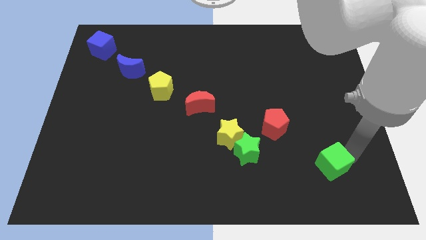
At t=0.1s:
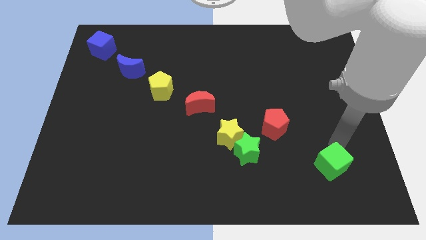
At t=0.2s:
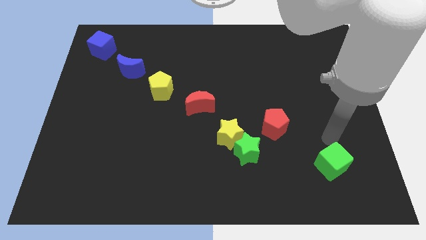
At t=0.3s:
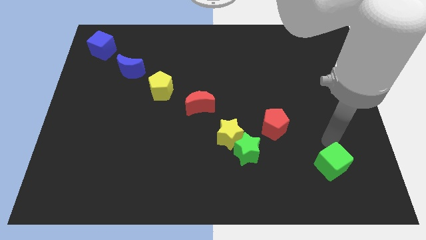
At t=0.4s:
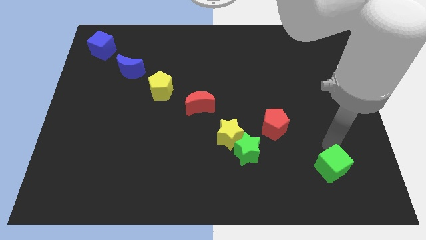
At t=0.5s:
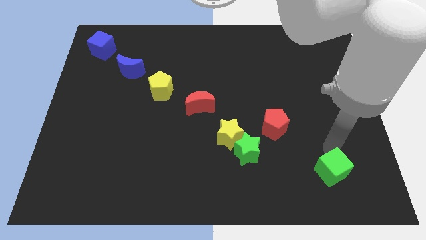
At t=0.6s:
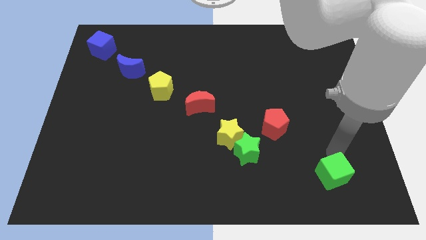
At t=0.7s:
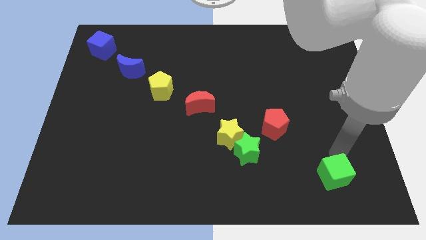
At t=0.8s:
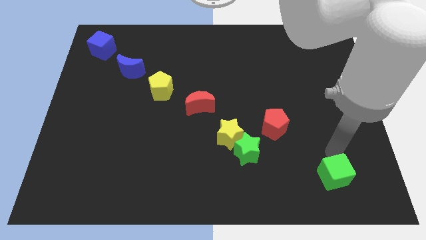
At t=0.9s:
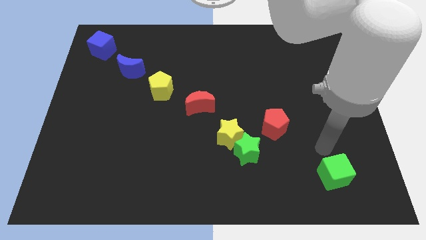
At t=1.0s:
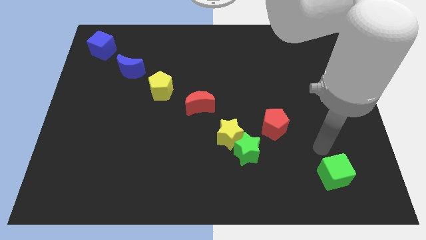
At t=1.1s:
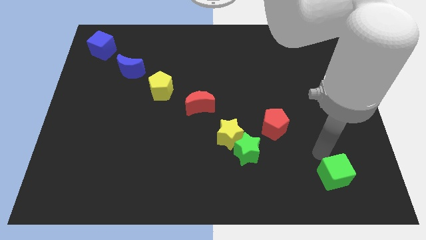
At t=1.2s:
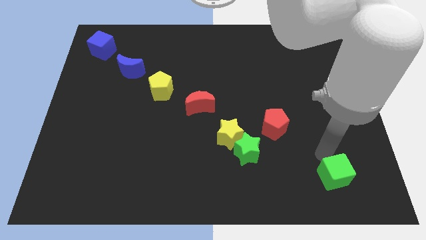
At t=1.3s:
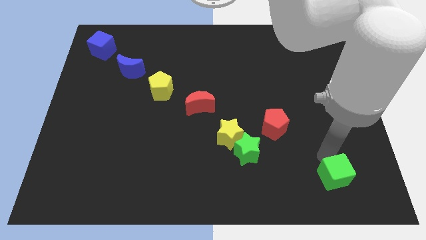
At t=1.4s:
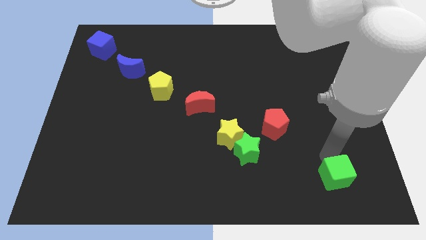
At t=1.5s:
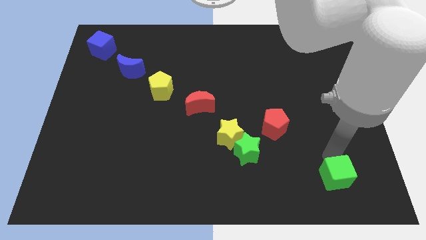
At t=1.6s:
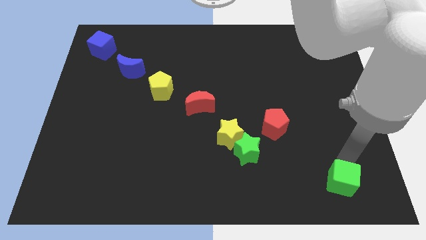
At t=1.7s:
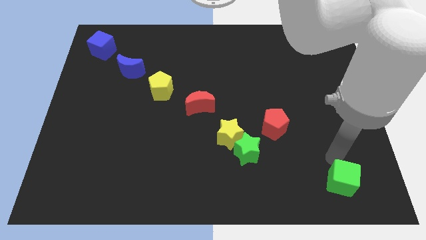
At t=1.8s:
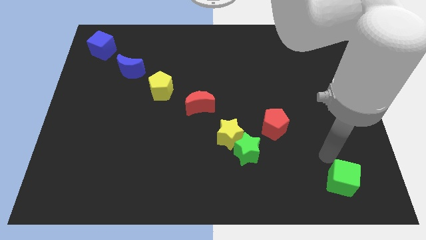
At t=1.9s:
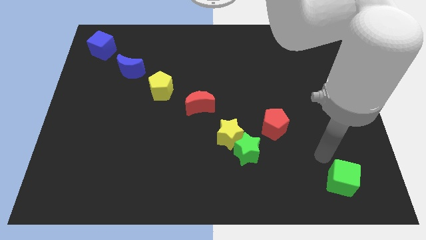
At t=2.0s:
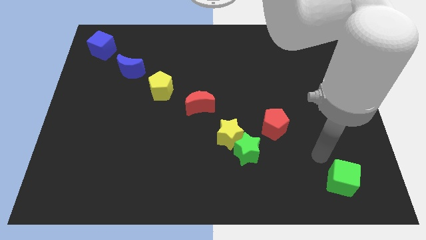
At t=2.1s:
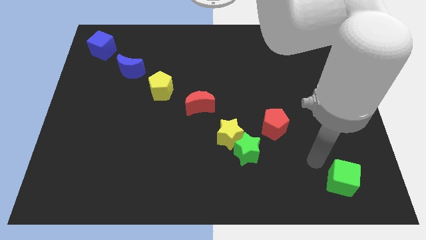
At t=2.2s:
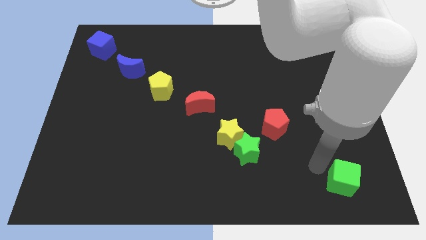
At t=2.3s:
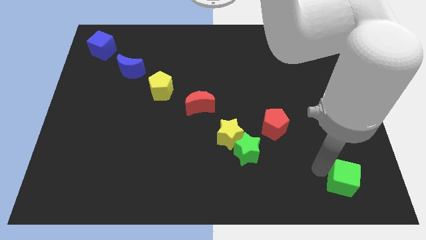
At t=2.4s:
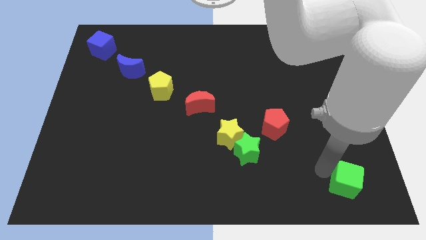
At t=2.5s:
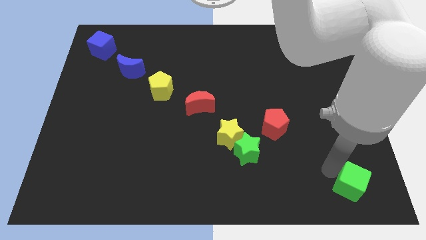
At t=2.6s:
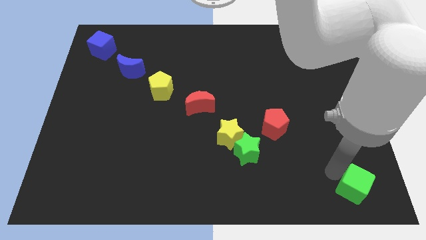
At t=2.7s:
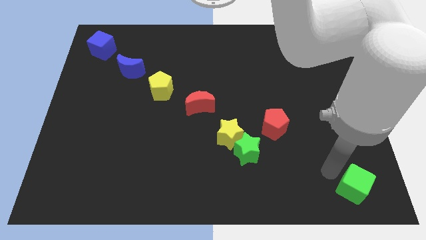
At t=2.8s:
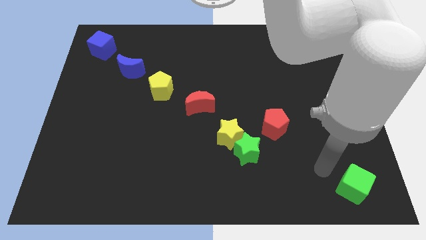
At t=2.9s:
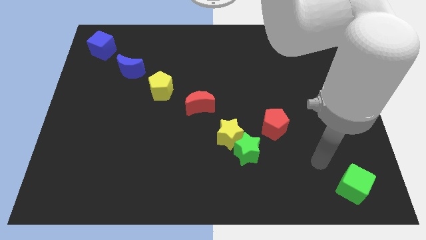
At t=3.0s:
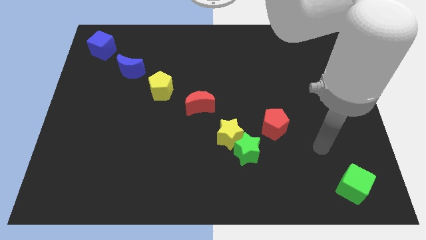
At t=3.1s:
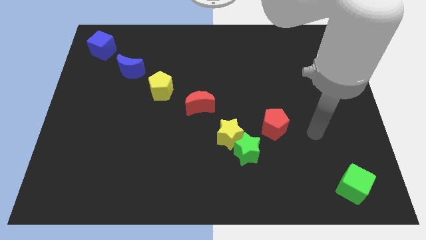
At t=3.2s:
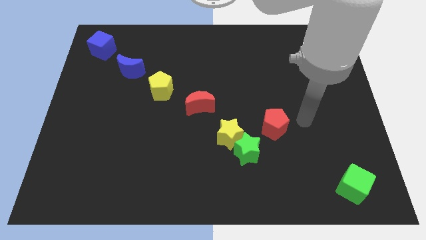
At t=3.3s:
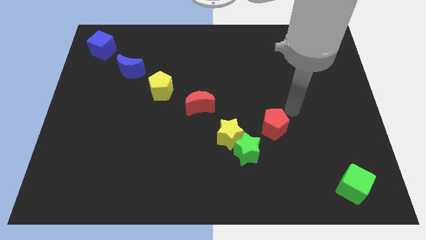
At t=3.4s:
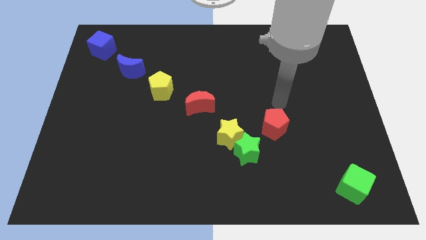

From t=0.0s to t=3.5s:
push the green cube towards the bottom right corner of the board

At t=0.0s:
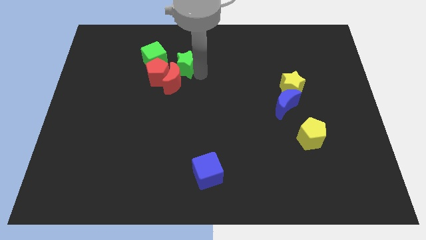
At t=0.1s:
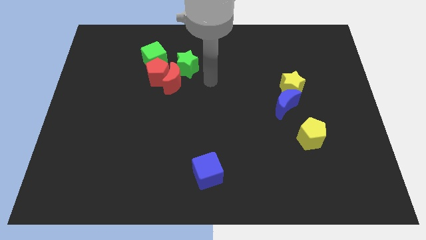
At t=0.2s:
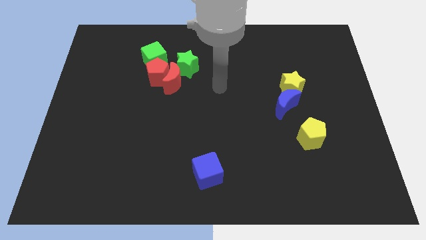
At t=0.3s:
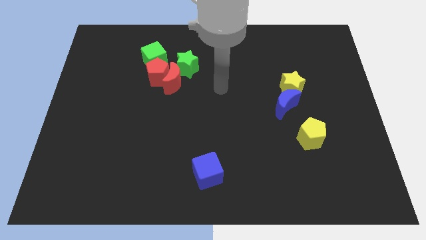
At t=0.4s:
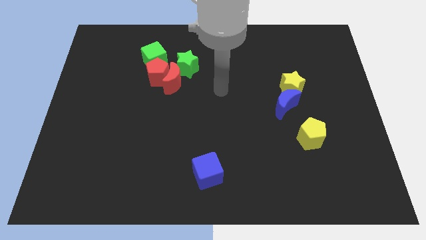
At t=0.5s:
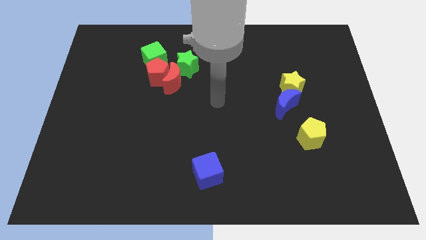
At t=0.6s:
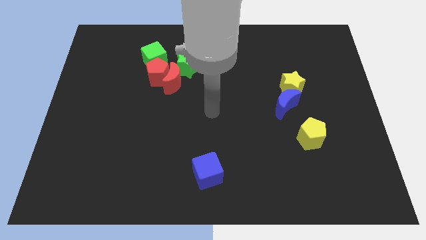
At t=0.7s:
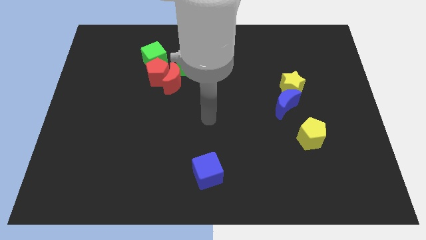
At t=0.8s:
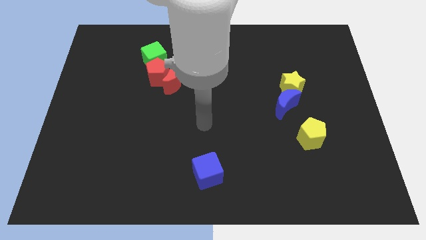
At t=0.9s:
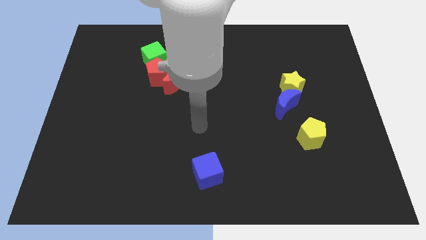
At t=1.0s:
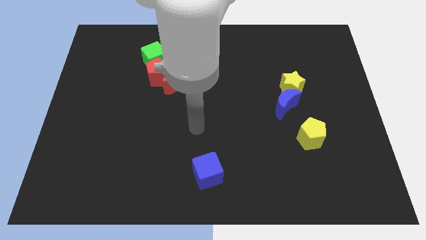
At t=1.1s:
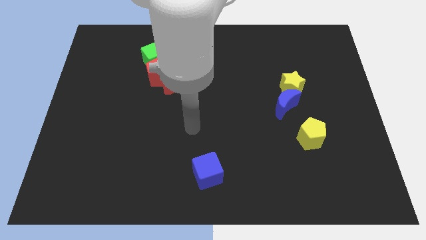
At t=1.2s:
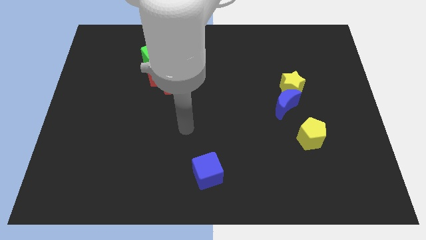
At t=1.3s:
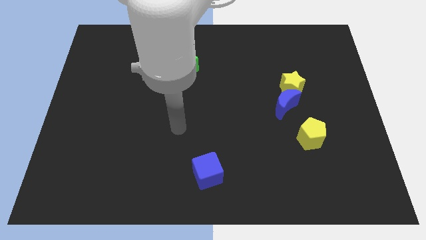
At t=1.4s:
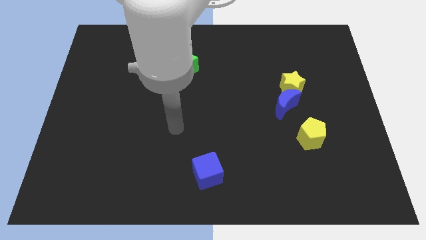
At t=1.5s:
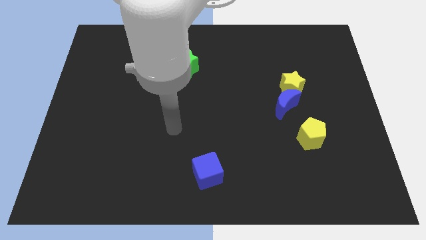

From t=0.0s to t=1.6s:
move the arm away from the green star

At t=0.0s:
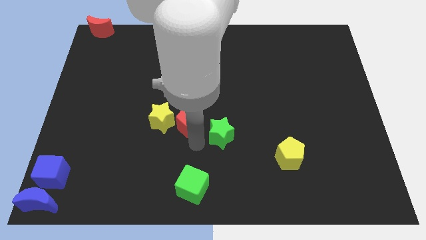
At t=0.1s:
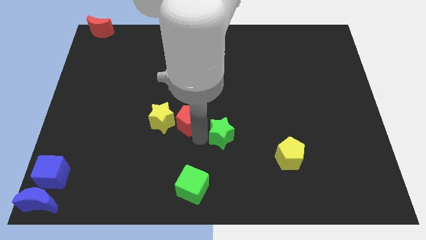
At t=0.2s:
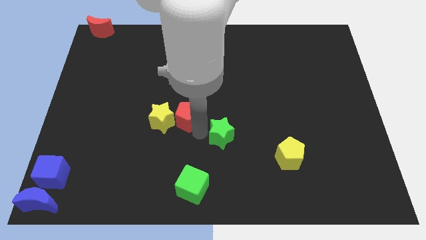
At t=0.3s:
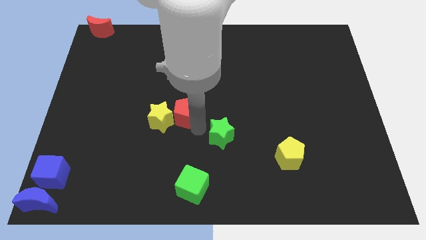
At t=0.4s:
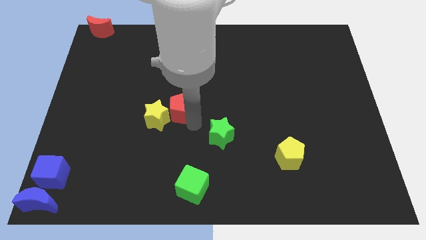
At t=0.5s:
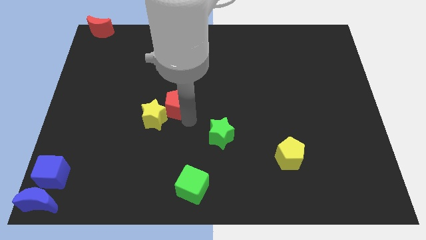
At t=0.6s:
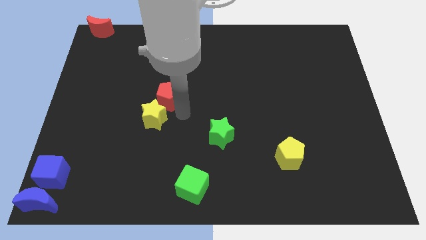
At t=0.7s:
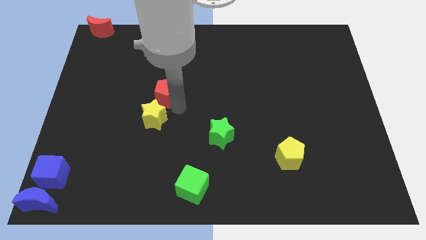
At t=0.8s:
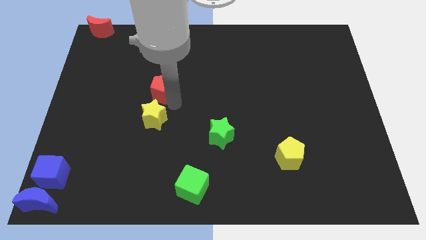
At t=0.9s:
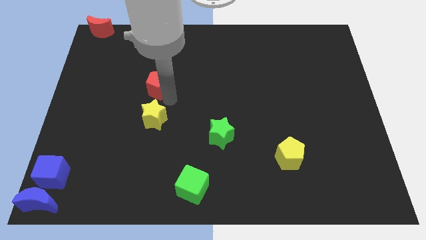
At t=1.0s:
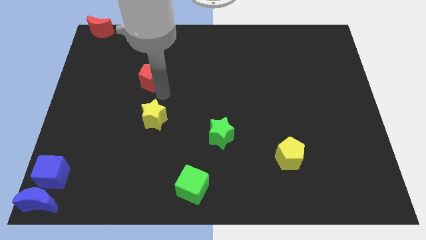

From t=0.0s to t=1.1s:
place the red pentagon vertically above the yellow star

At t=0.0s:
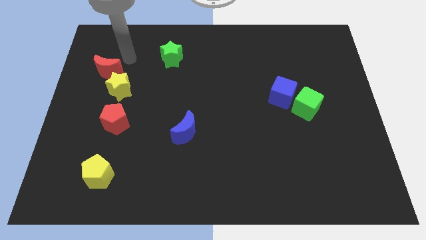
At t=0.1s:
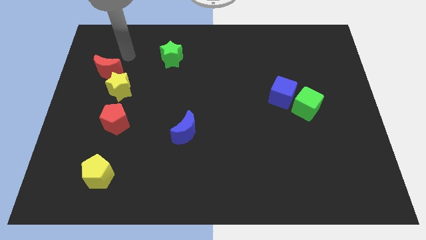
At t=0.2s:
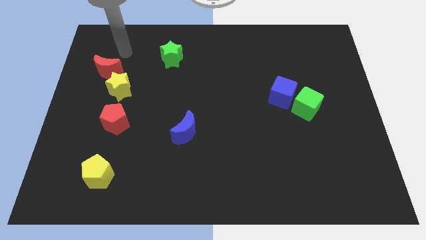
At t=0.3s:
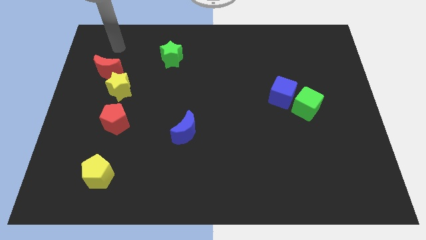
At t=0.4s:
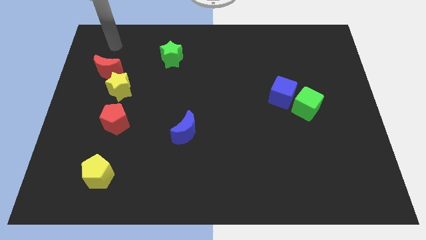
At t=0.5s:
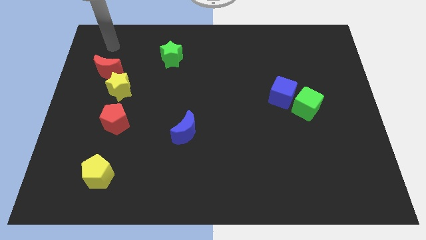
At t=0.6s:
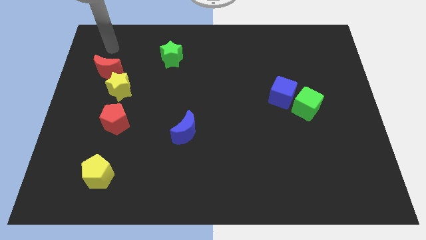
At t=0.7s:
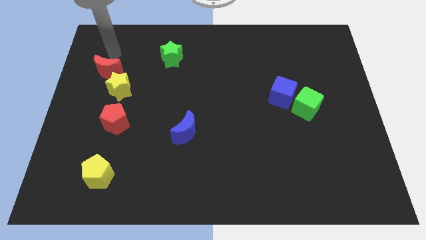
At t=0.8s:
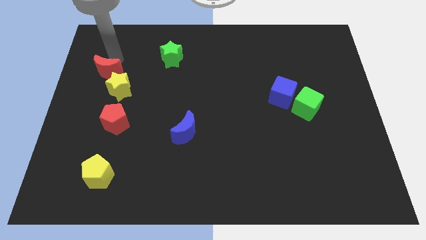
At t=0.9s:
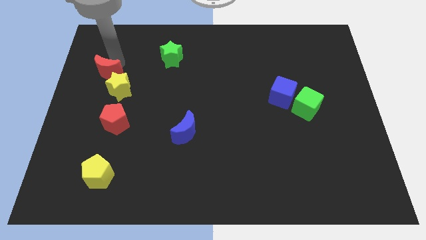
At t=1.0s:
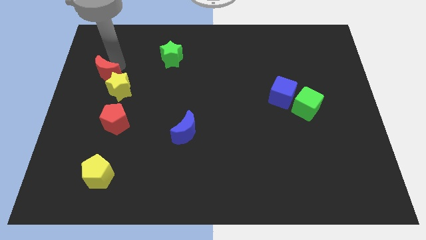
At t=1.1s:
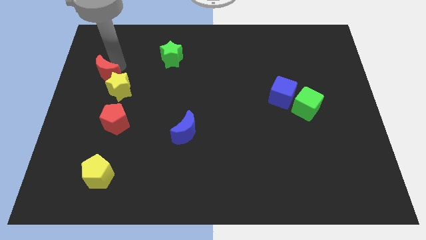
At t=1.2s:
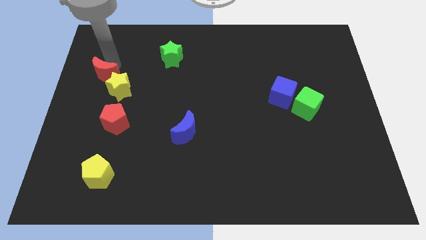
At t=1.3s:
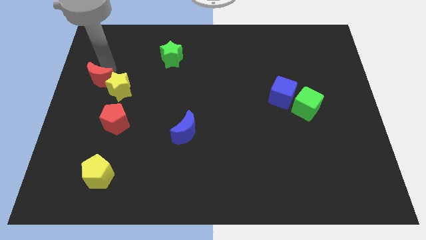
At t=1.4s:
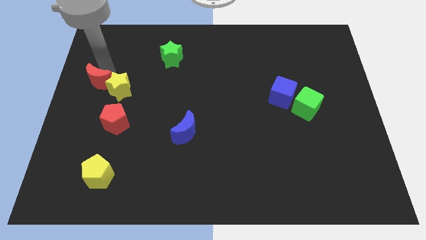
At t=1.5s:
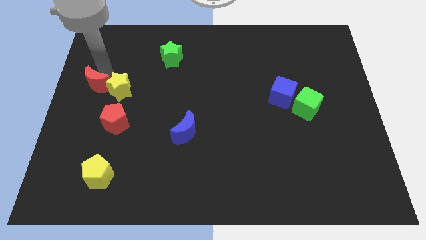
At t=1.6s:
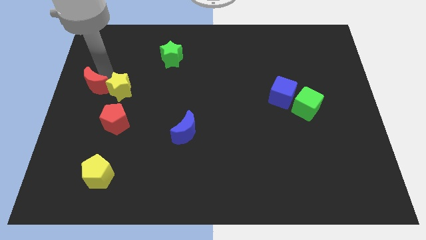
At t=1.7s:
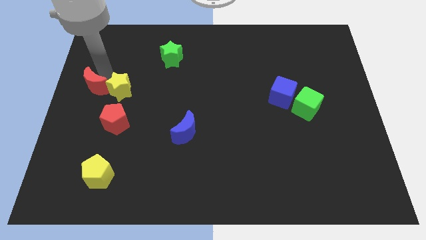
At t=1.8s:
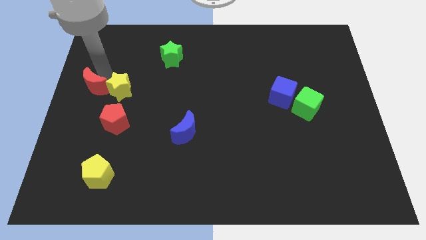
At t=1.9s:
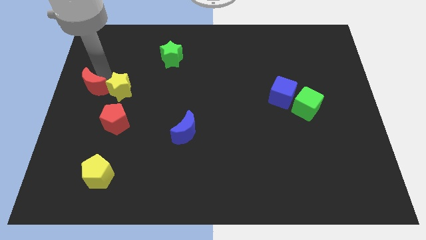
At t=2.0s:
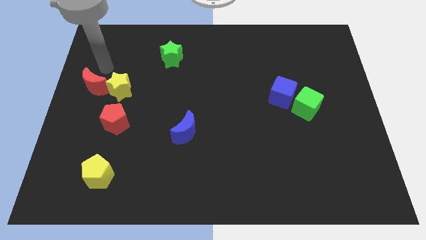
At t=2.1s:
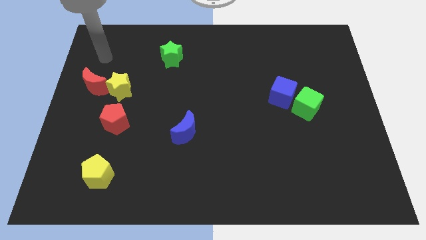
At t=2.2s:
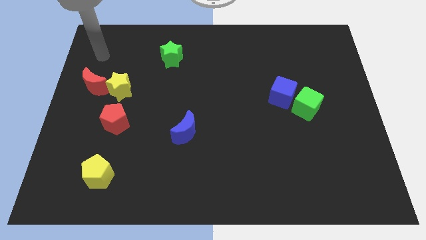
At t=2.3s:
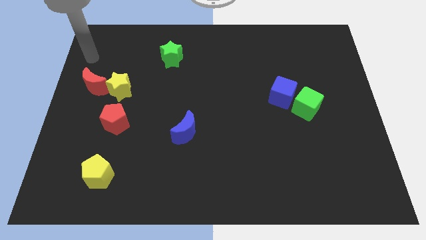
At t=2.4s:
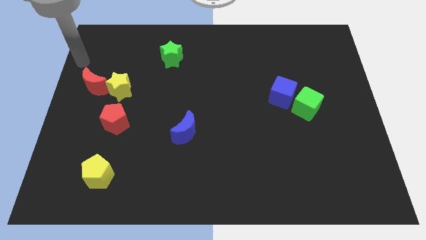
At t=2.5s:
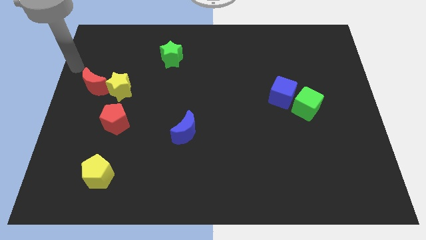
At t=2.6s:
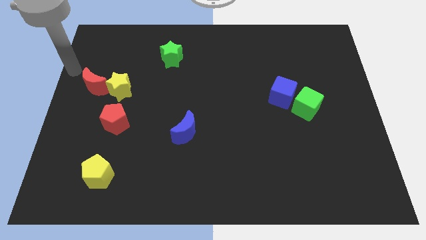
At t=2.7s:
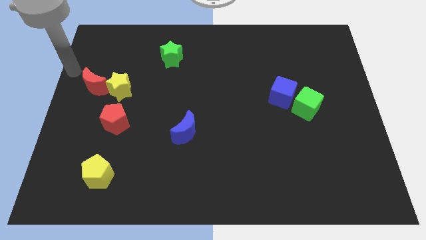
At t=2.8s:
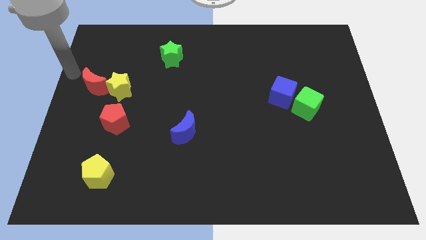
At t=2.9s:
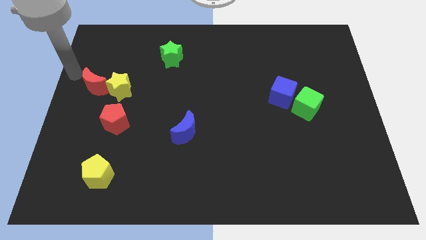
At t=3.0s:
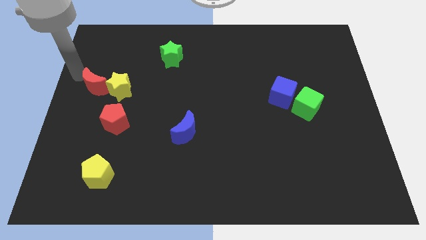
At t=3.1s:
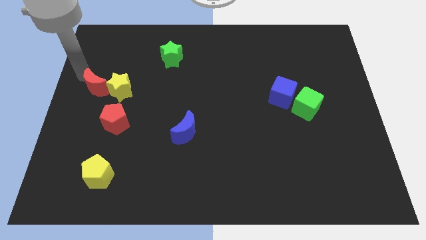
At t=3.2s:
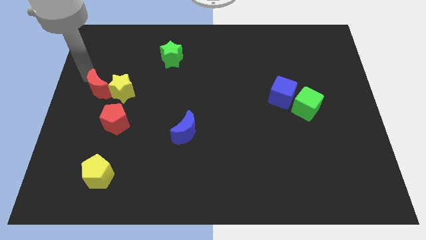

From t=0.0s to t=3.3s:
move the red moon to the left side of the yellow star
